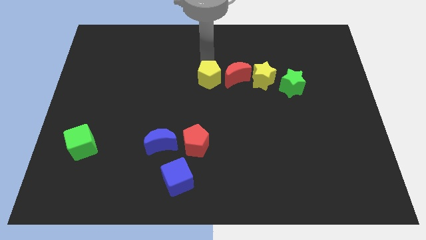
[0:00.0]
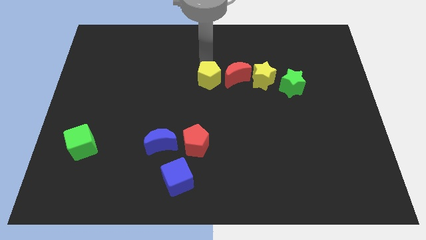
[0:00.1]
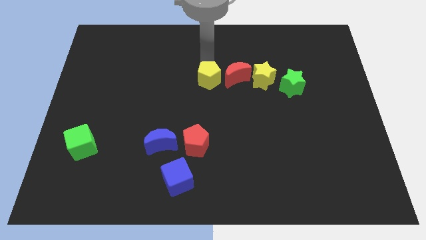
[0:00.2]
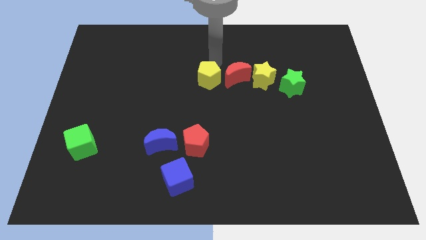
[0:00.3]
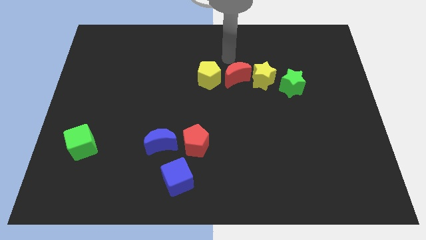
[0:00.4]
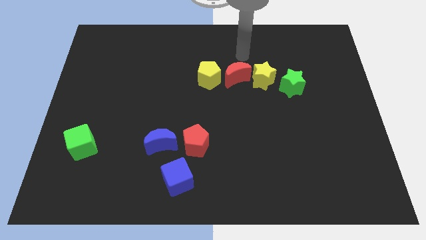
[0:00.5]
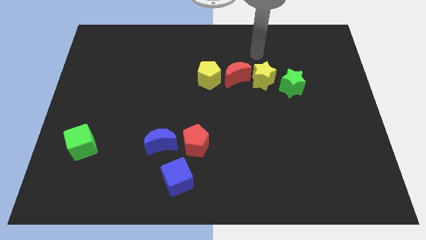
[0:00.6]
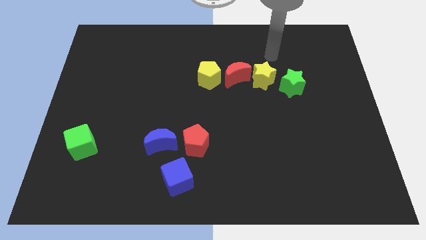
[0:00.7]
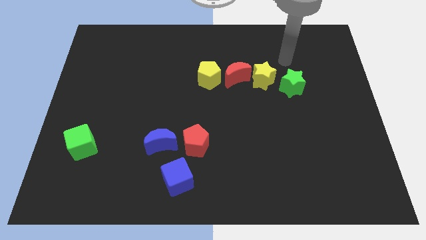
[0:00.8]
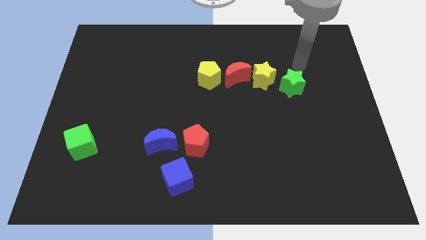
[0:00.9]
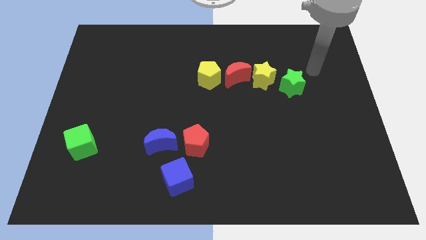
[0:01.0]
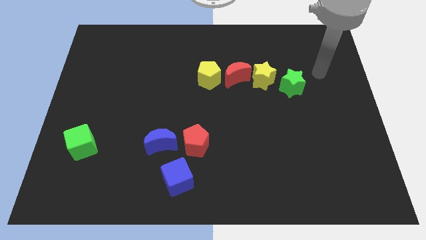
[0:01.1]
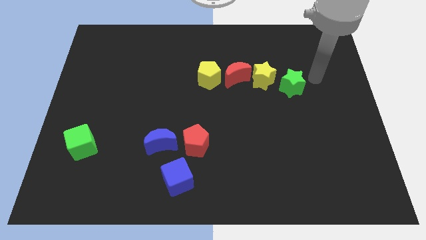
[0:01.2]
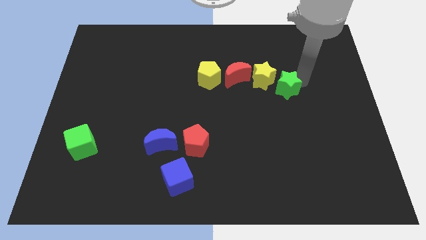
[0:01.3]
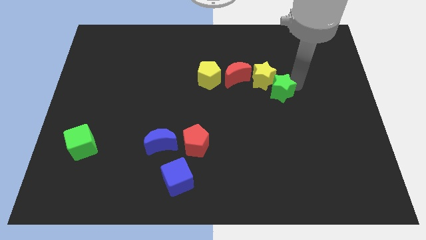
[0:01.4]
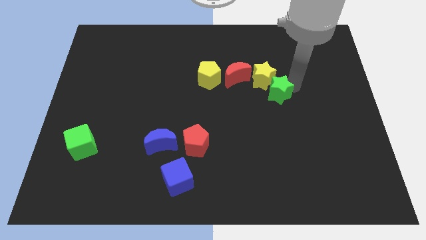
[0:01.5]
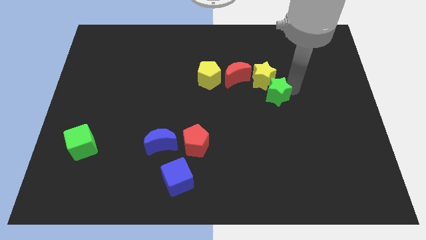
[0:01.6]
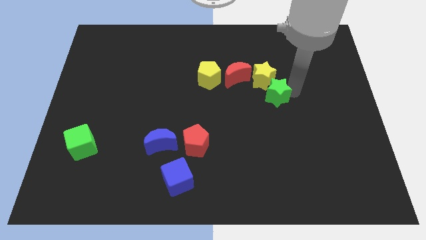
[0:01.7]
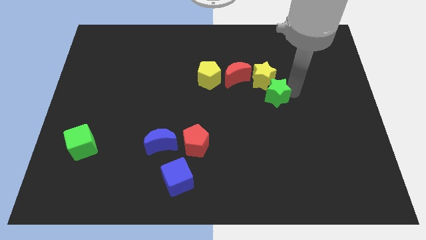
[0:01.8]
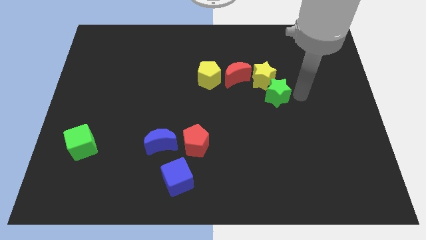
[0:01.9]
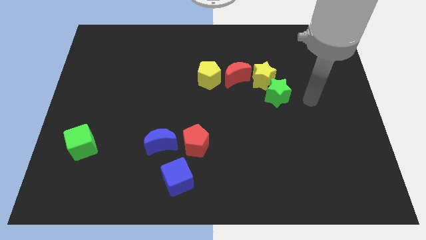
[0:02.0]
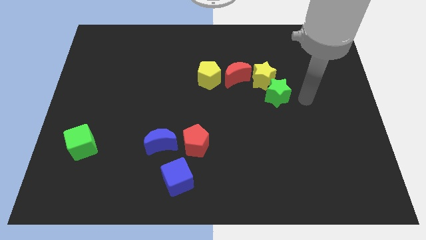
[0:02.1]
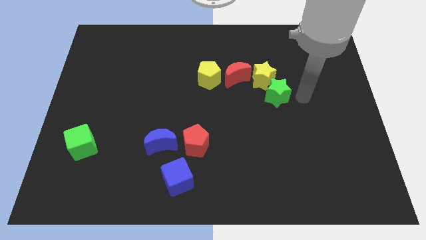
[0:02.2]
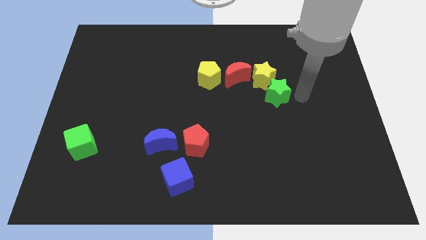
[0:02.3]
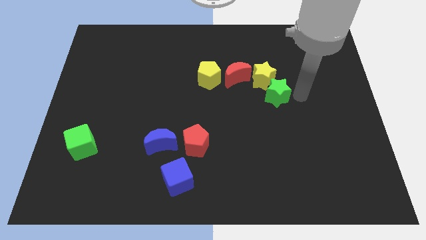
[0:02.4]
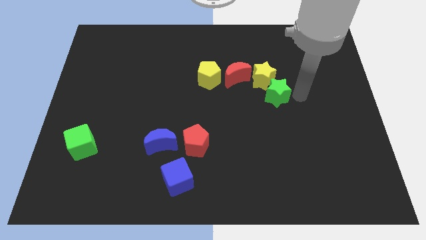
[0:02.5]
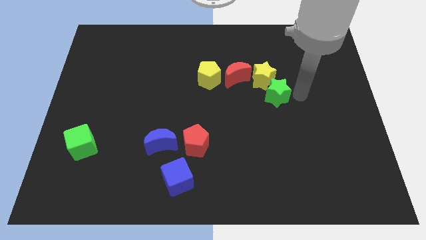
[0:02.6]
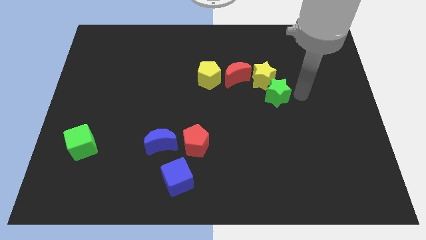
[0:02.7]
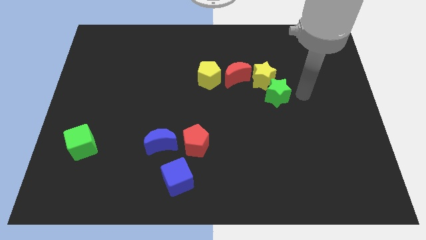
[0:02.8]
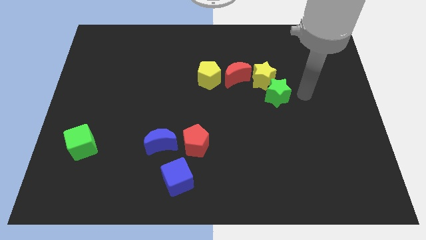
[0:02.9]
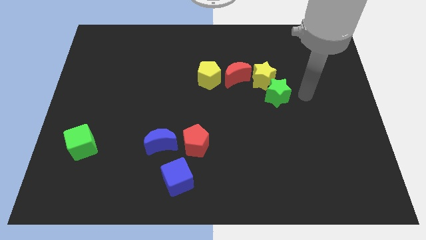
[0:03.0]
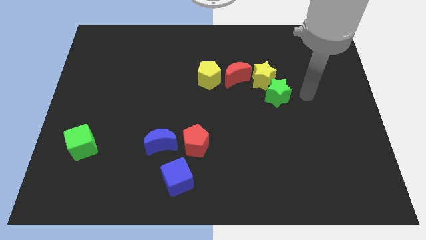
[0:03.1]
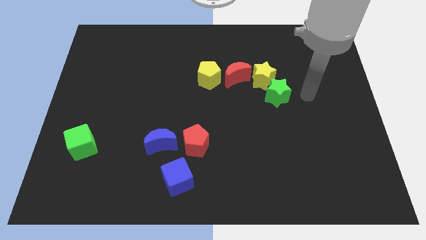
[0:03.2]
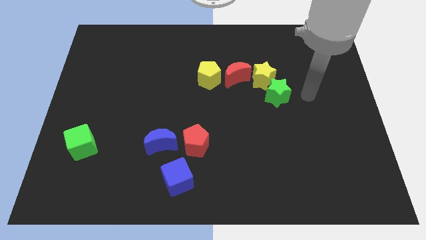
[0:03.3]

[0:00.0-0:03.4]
move the green star to the bottom right of yellow star

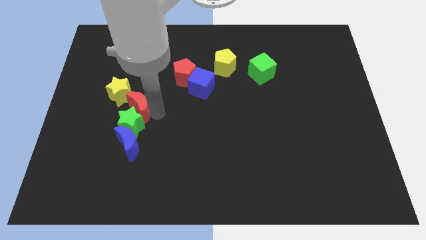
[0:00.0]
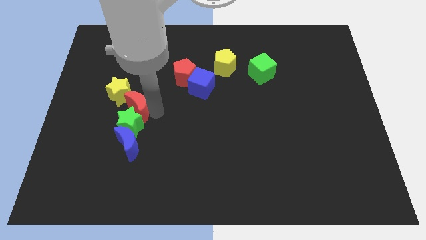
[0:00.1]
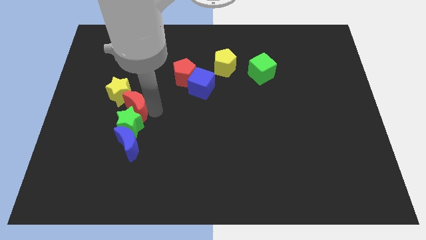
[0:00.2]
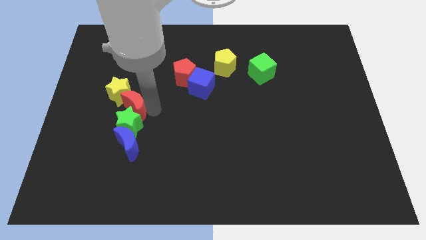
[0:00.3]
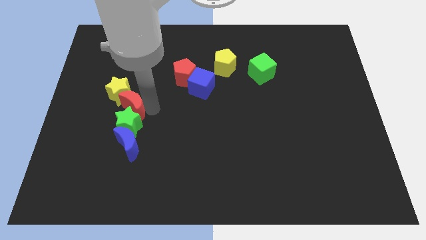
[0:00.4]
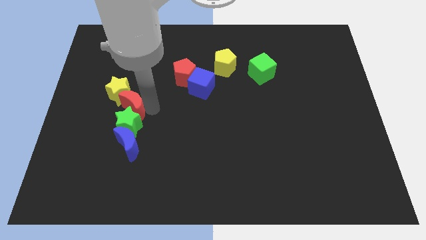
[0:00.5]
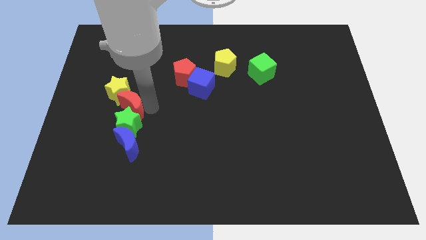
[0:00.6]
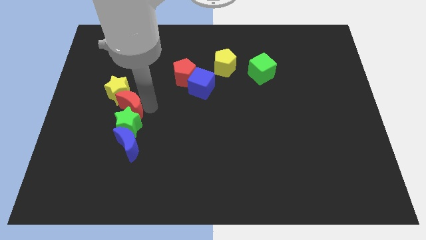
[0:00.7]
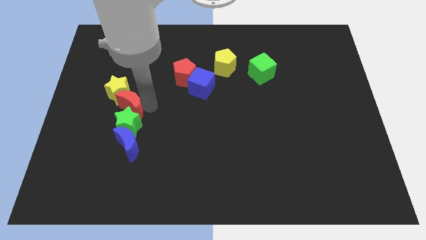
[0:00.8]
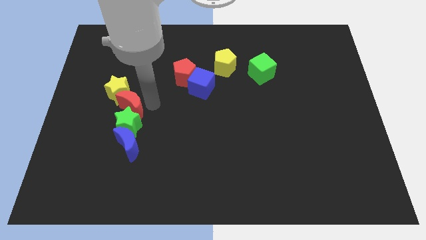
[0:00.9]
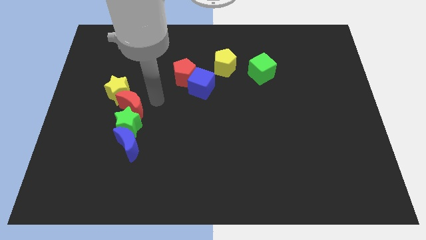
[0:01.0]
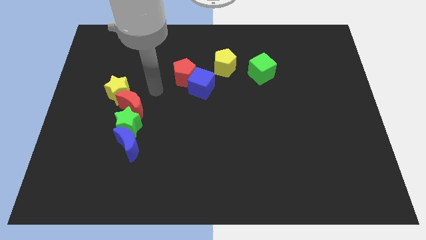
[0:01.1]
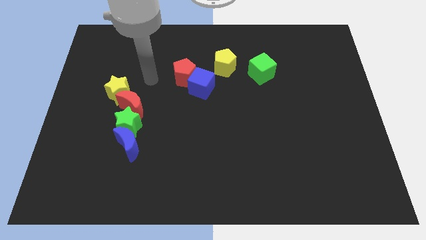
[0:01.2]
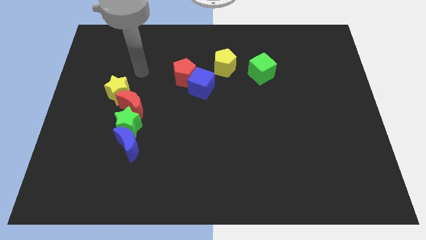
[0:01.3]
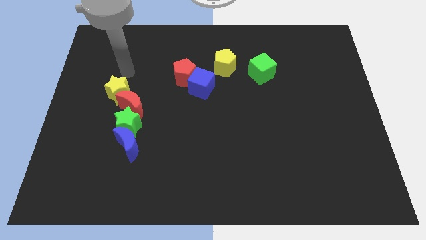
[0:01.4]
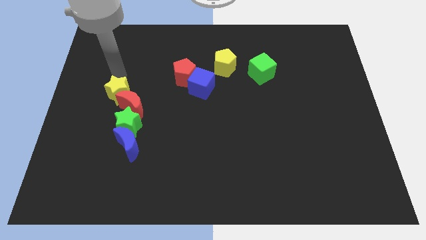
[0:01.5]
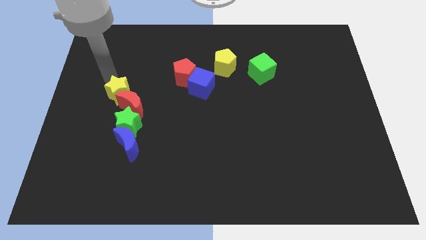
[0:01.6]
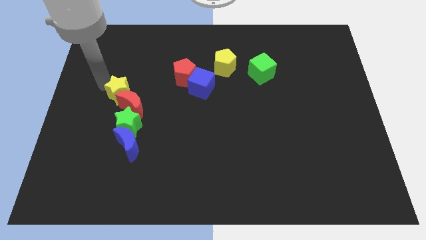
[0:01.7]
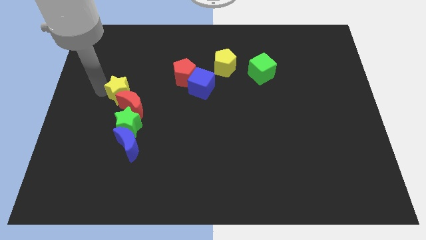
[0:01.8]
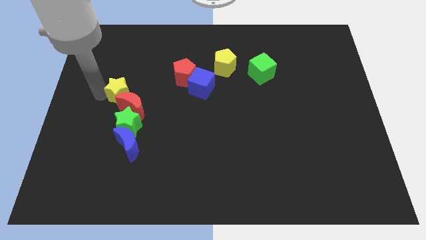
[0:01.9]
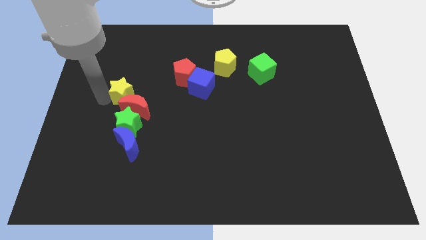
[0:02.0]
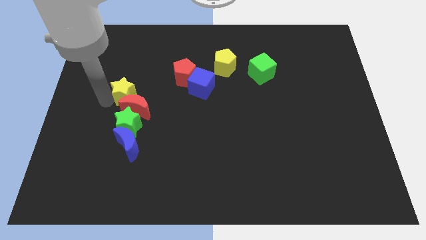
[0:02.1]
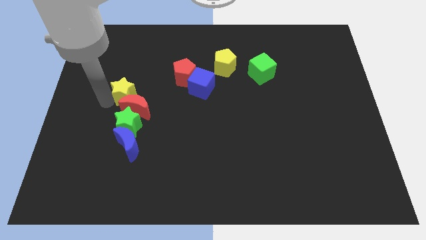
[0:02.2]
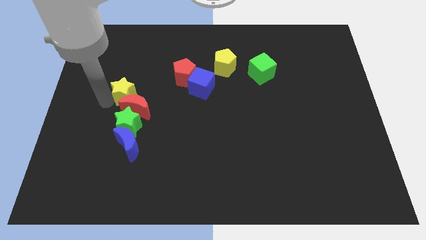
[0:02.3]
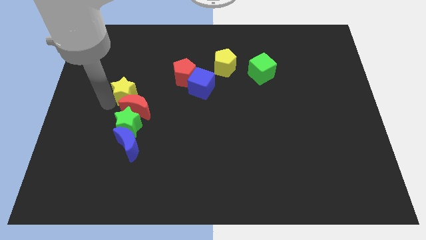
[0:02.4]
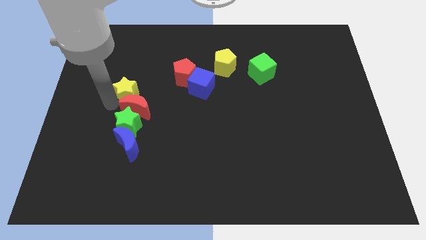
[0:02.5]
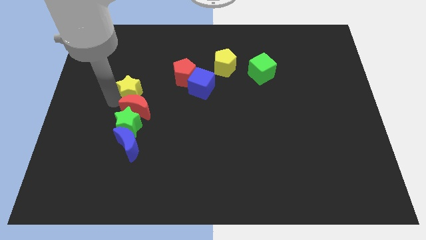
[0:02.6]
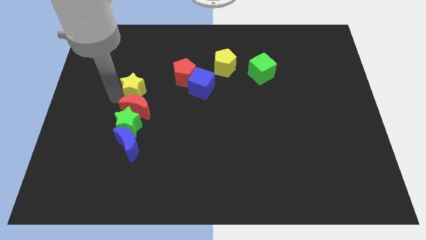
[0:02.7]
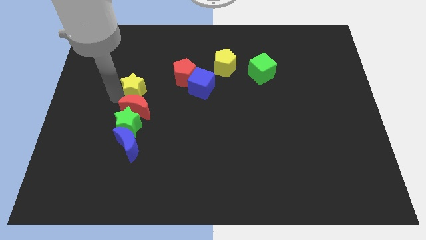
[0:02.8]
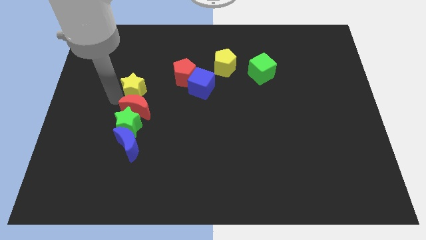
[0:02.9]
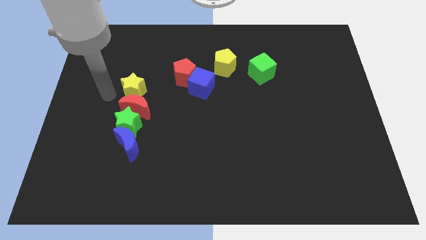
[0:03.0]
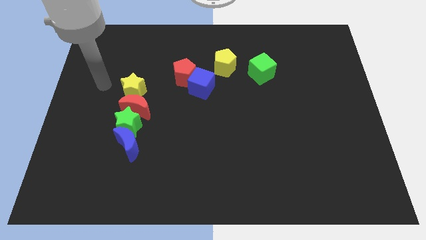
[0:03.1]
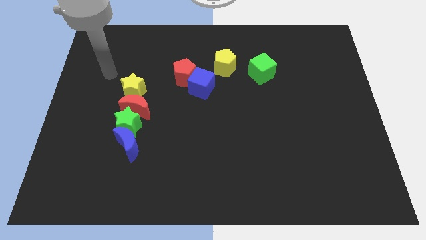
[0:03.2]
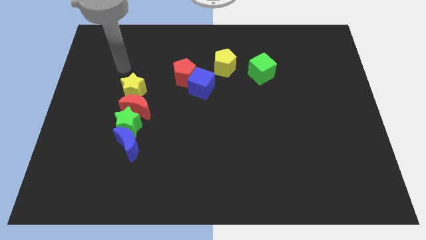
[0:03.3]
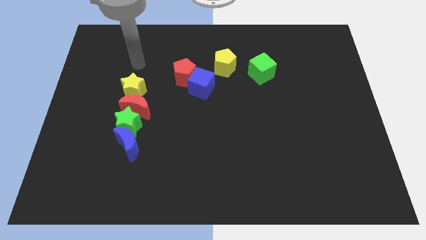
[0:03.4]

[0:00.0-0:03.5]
push the yellow star towards the red crescent

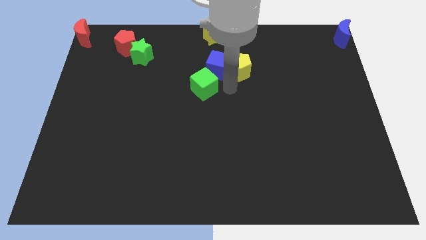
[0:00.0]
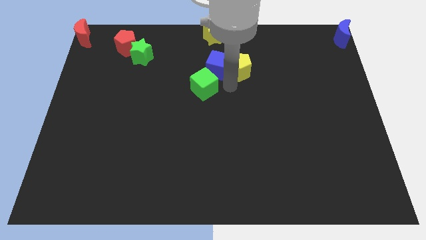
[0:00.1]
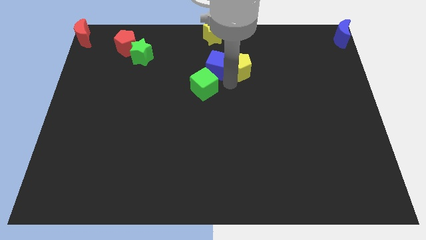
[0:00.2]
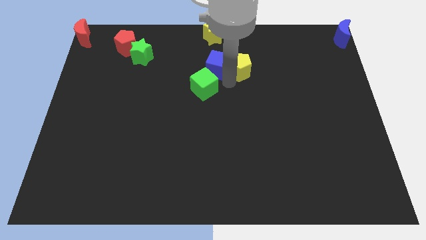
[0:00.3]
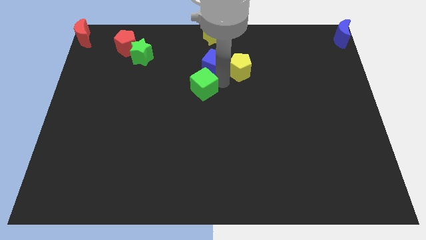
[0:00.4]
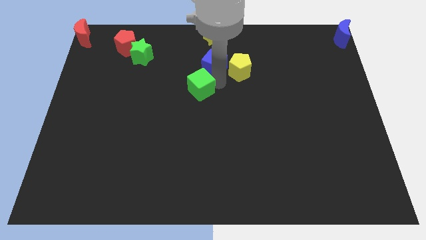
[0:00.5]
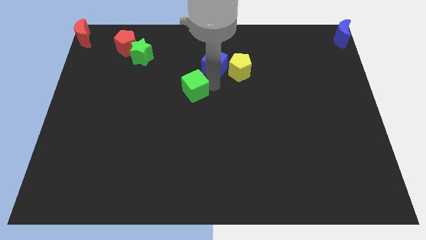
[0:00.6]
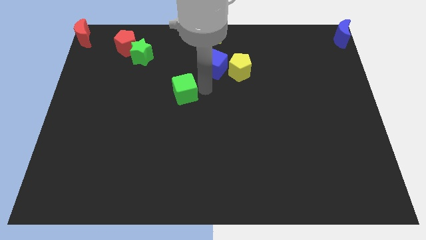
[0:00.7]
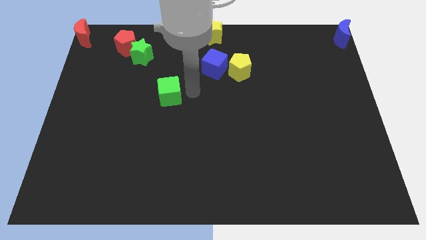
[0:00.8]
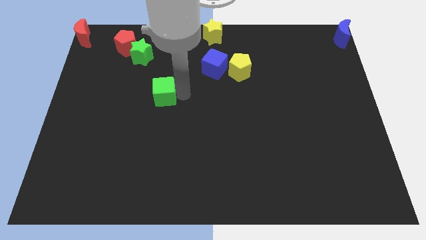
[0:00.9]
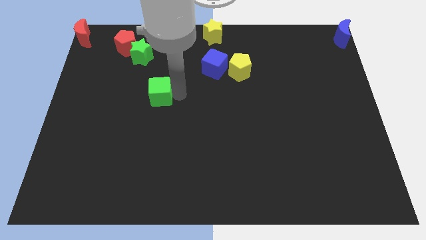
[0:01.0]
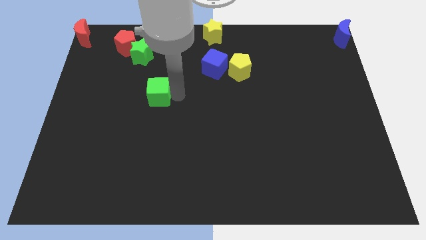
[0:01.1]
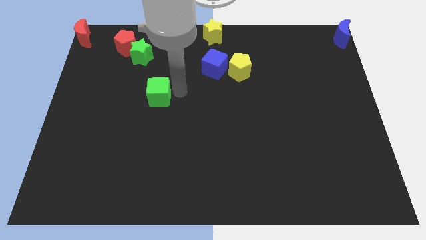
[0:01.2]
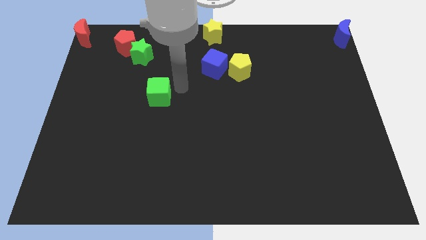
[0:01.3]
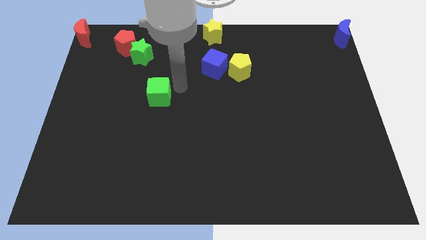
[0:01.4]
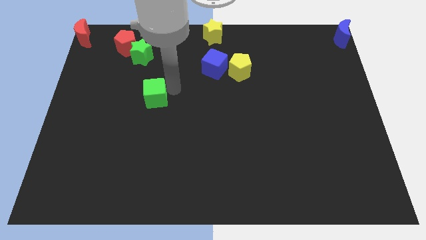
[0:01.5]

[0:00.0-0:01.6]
move the green cube away from the blue cube

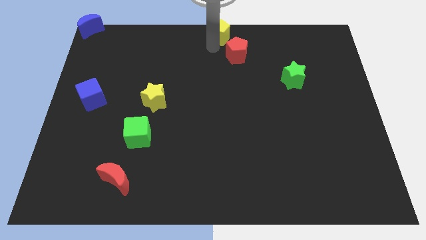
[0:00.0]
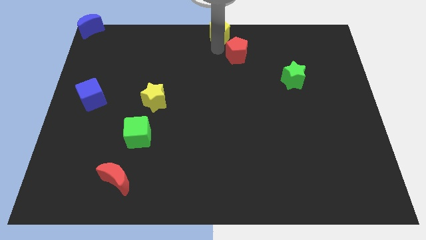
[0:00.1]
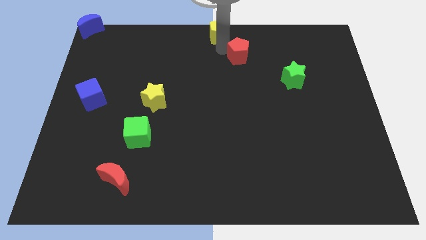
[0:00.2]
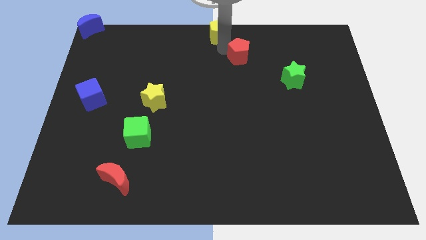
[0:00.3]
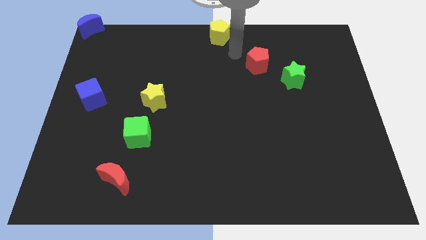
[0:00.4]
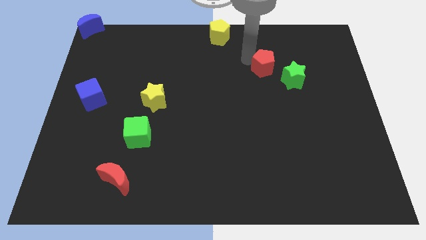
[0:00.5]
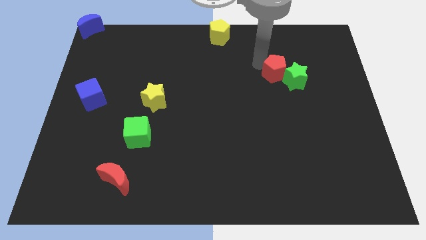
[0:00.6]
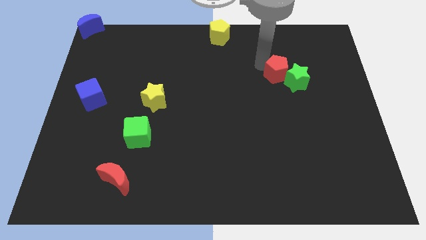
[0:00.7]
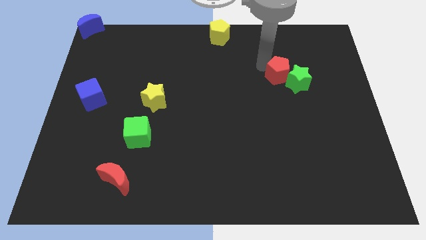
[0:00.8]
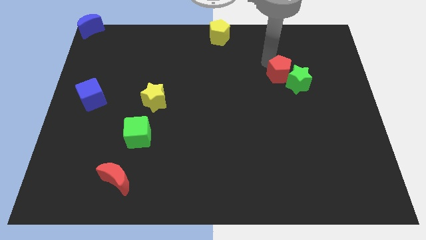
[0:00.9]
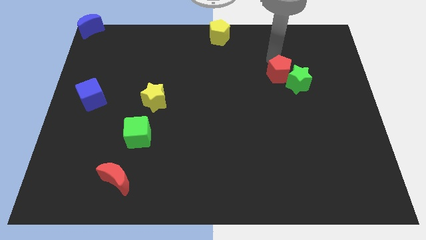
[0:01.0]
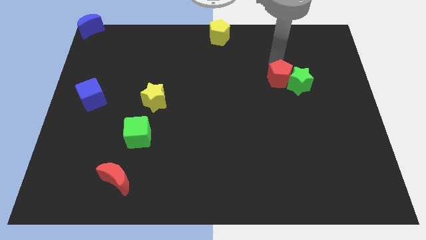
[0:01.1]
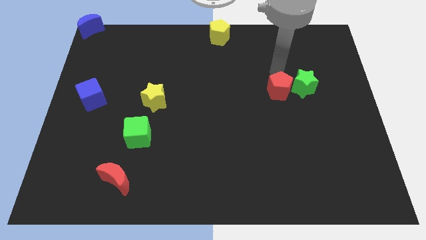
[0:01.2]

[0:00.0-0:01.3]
move the red pentagon into the green star
